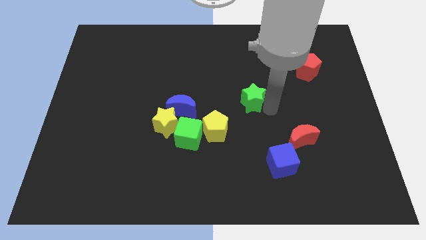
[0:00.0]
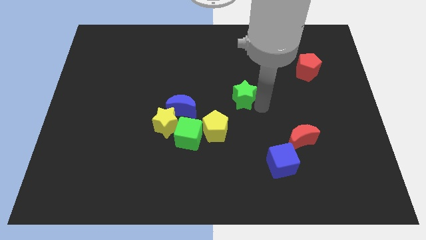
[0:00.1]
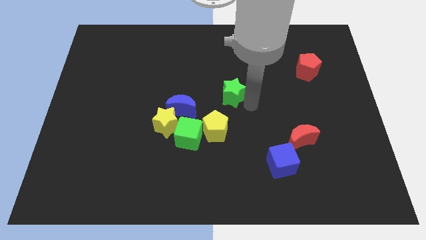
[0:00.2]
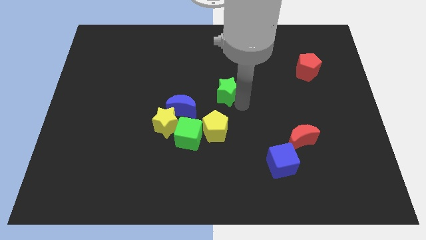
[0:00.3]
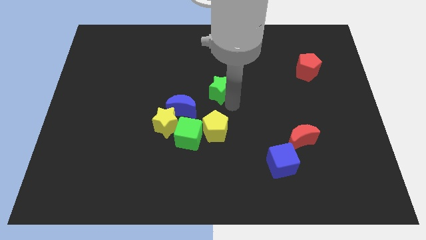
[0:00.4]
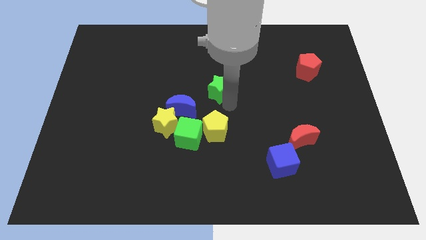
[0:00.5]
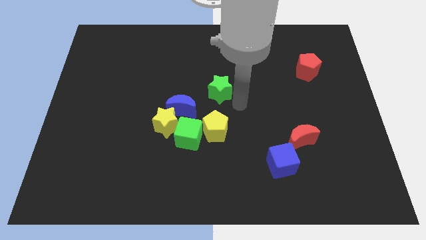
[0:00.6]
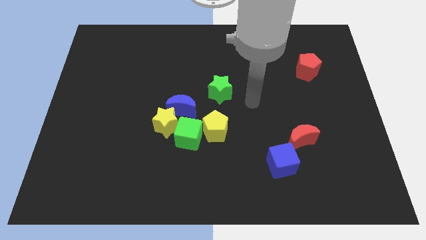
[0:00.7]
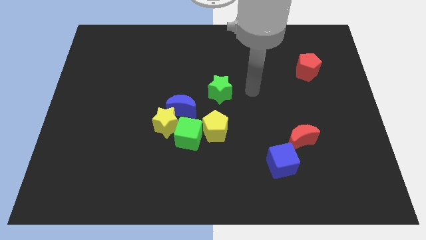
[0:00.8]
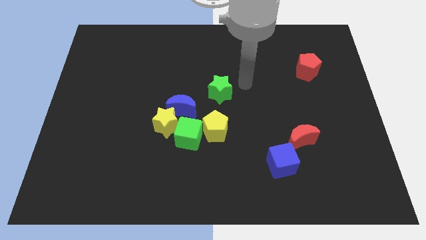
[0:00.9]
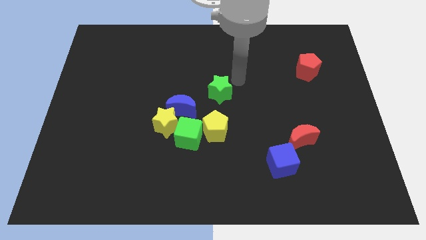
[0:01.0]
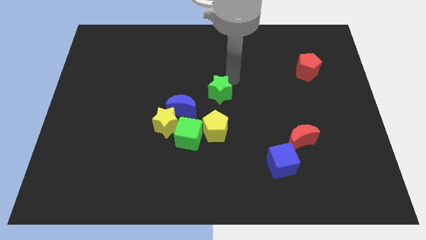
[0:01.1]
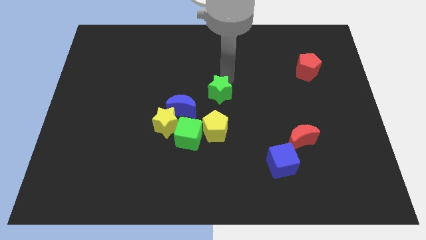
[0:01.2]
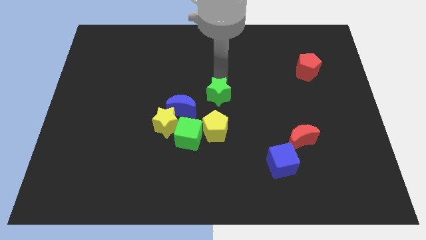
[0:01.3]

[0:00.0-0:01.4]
put the green star vertically above the yellow pentagon

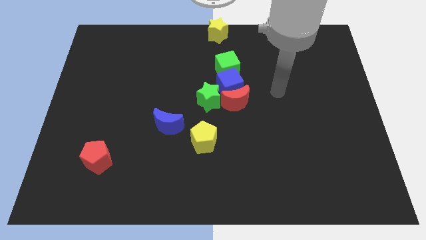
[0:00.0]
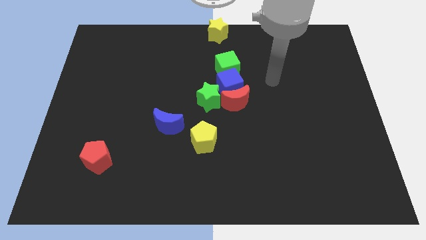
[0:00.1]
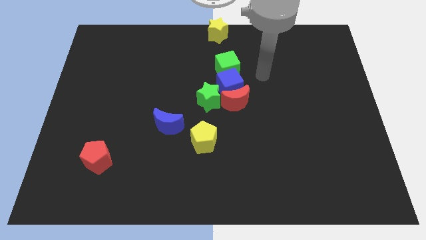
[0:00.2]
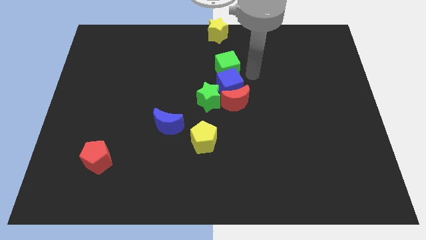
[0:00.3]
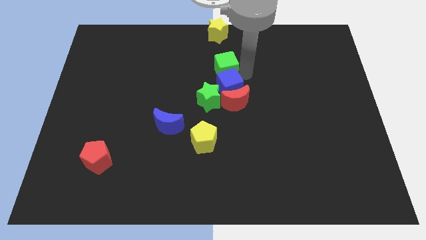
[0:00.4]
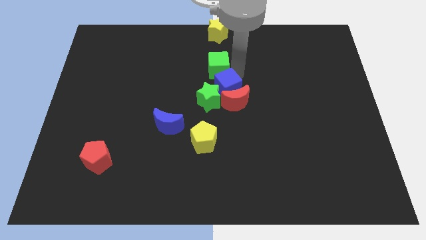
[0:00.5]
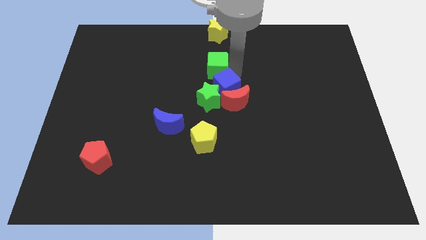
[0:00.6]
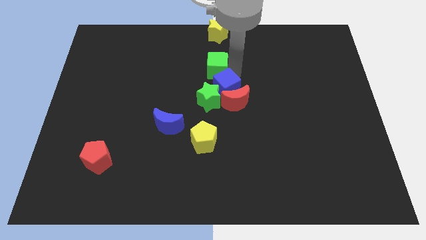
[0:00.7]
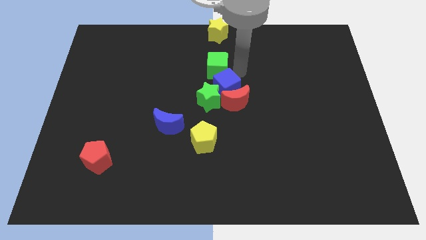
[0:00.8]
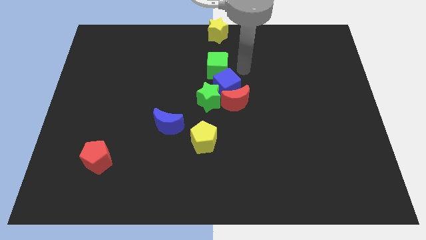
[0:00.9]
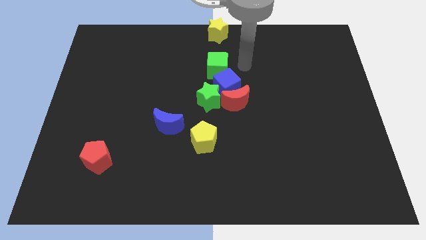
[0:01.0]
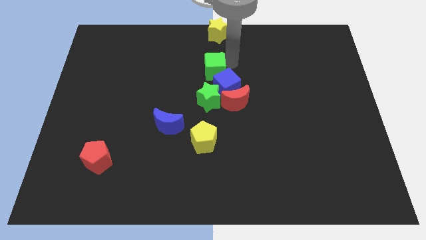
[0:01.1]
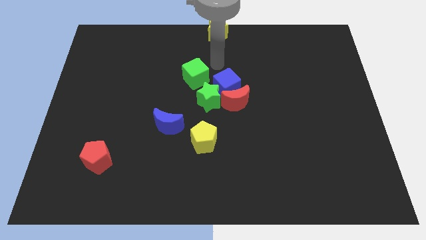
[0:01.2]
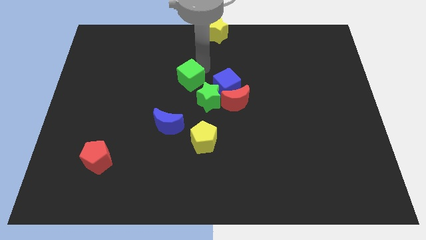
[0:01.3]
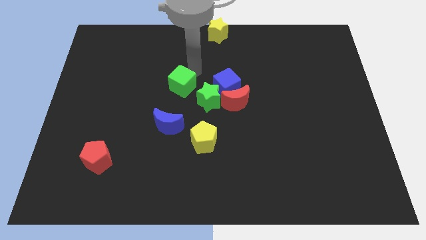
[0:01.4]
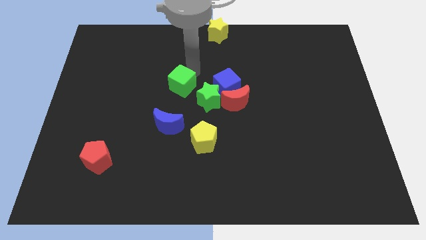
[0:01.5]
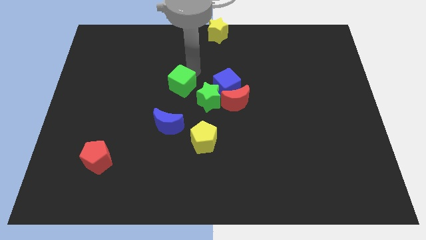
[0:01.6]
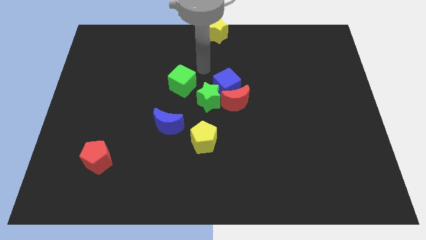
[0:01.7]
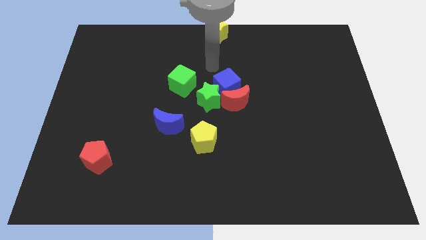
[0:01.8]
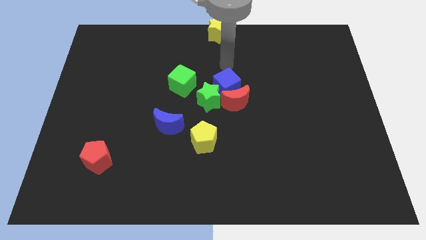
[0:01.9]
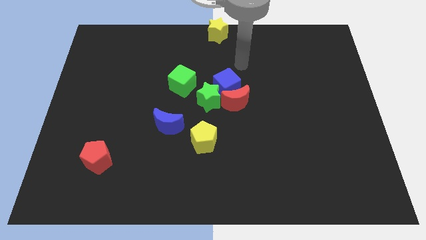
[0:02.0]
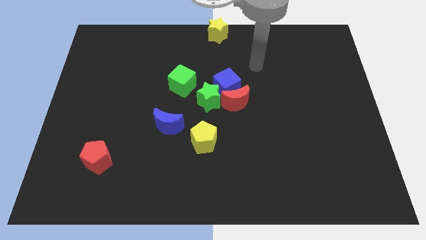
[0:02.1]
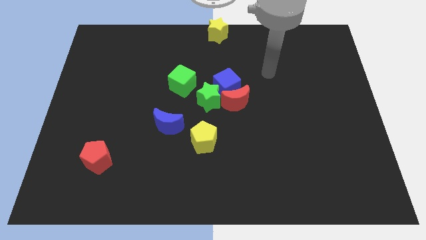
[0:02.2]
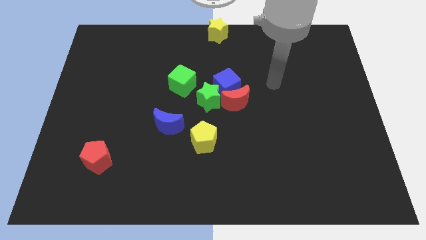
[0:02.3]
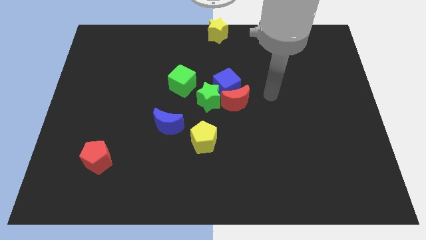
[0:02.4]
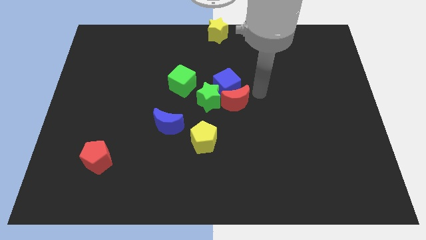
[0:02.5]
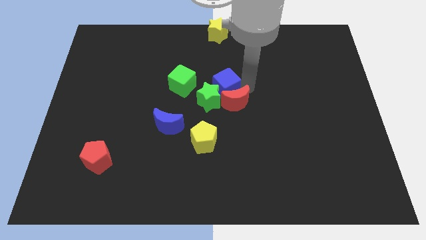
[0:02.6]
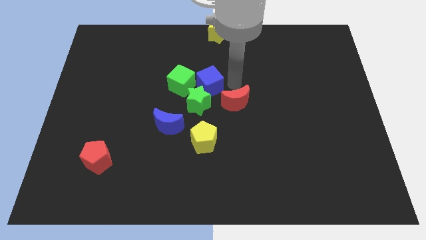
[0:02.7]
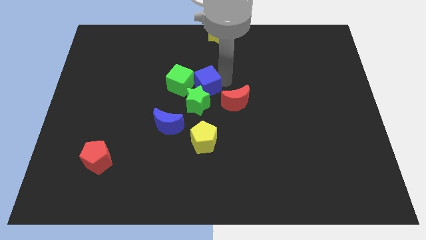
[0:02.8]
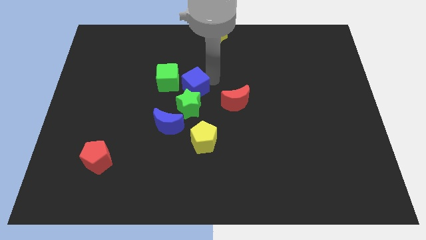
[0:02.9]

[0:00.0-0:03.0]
move the green cube and green star above the blue moon

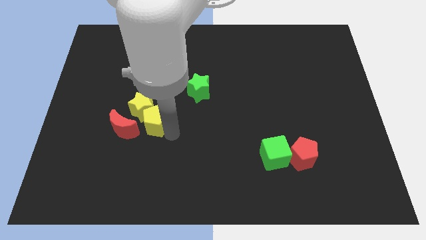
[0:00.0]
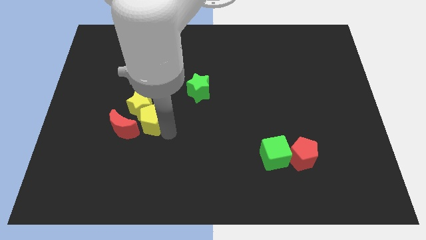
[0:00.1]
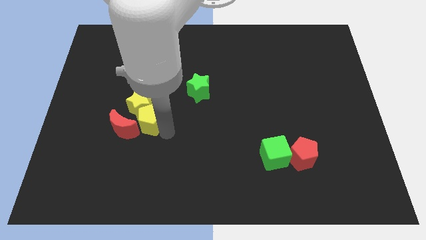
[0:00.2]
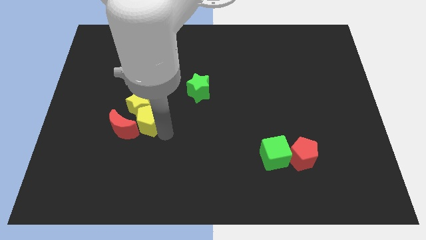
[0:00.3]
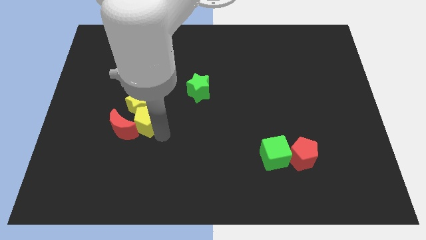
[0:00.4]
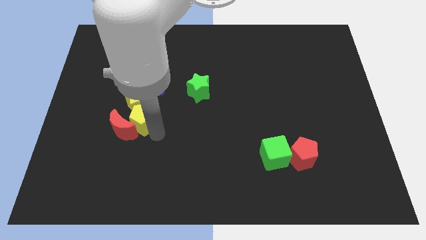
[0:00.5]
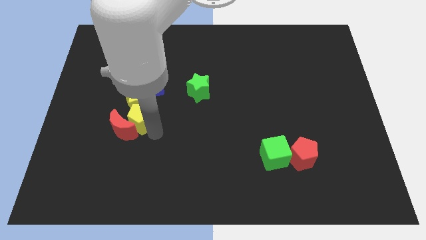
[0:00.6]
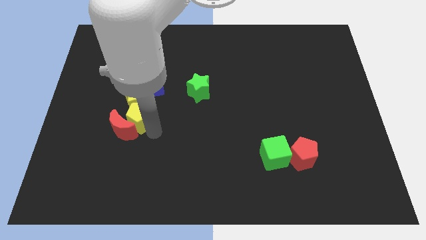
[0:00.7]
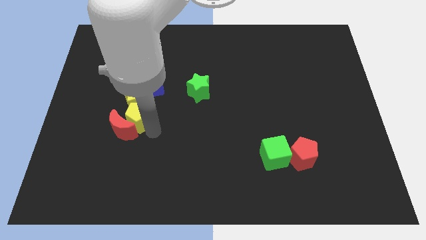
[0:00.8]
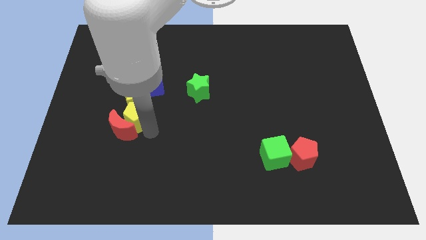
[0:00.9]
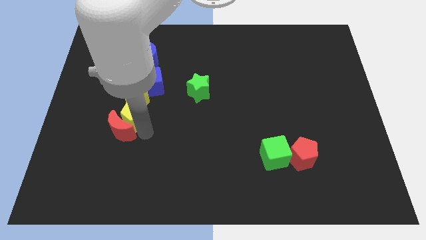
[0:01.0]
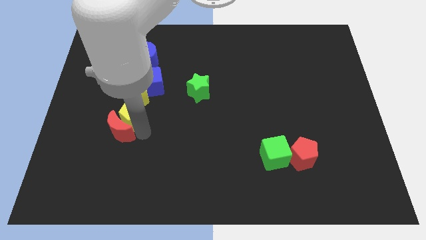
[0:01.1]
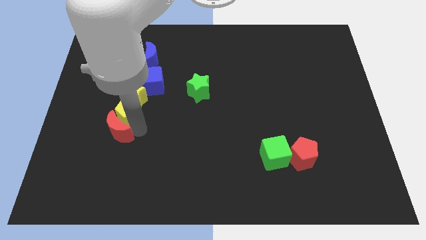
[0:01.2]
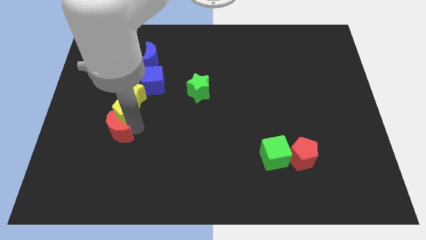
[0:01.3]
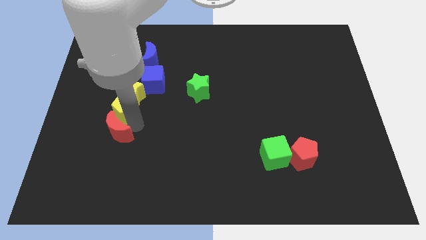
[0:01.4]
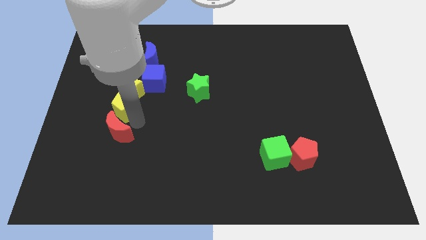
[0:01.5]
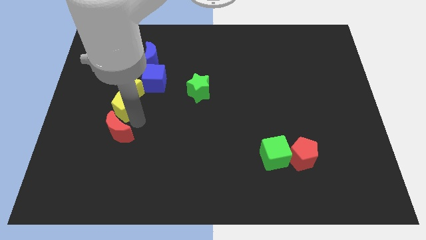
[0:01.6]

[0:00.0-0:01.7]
put both the yellow blocks to the top side of the red moon

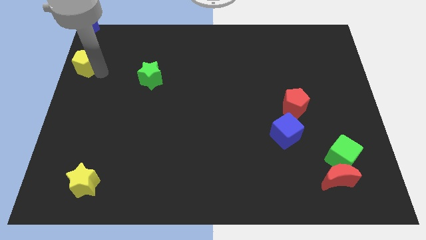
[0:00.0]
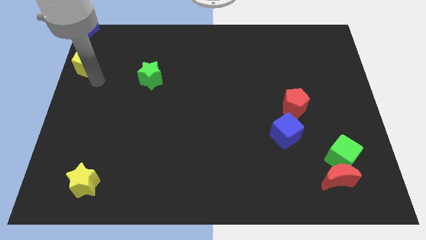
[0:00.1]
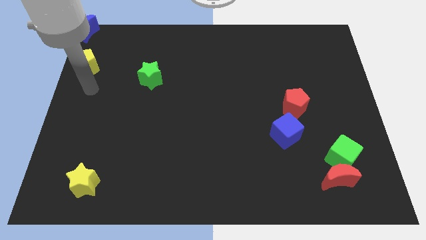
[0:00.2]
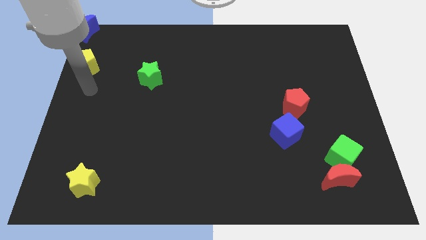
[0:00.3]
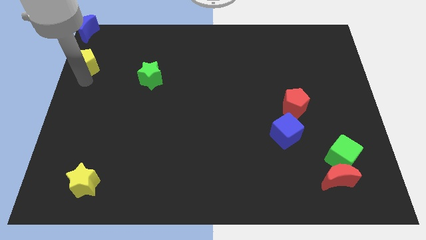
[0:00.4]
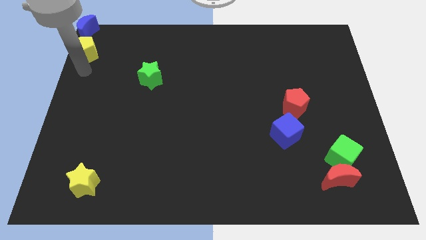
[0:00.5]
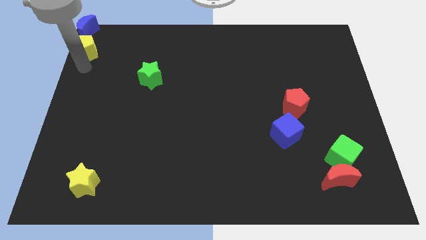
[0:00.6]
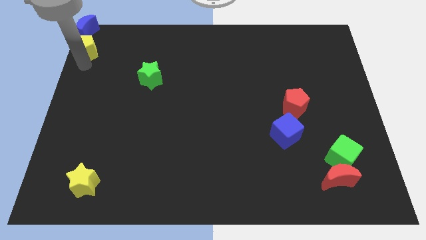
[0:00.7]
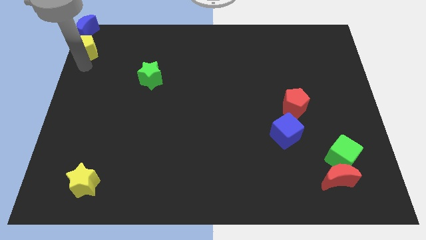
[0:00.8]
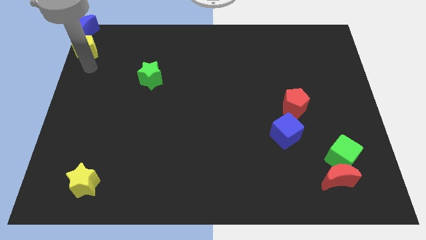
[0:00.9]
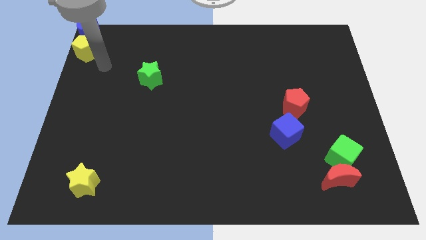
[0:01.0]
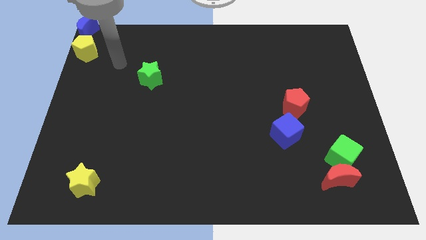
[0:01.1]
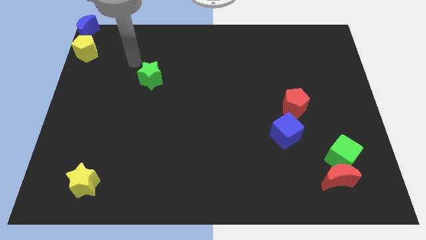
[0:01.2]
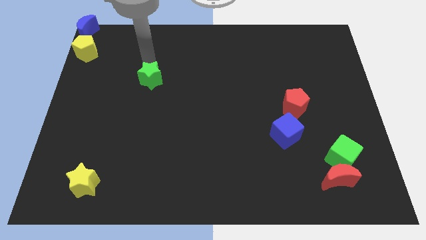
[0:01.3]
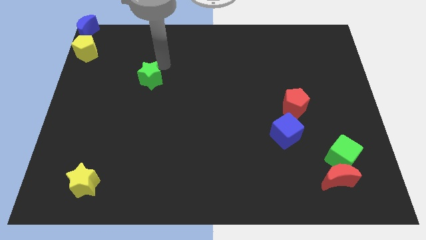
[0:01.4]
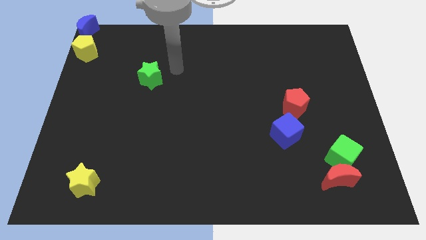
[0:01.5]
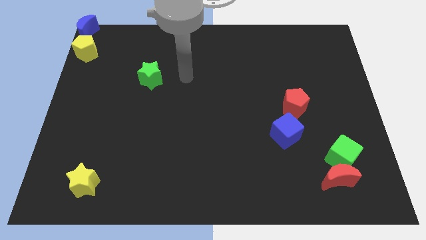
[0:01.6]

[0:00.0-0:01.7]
place the yellow pentagon below the blue crescent

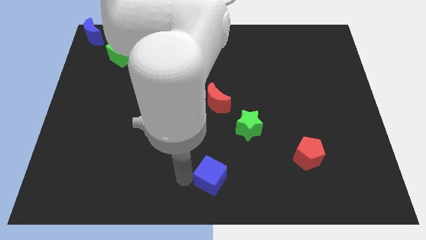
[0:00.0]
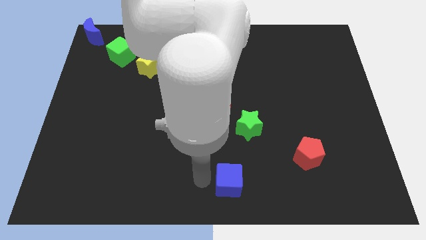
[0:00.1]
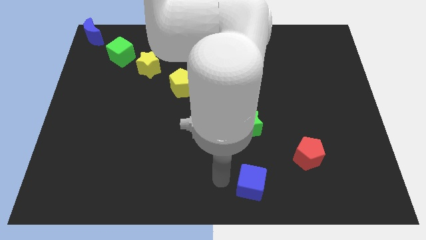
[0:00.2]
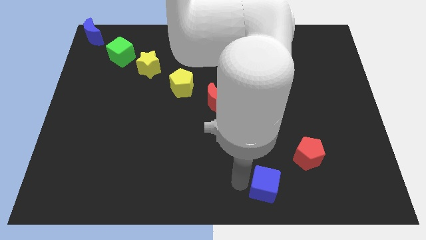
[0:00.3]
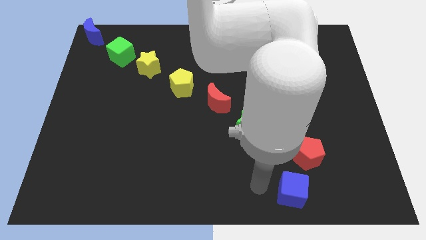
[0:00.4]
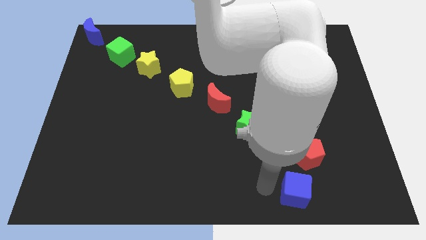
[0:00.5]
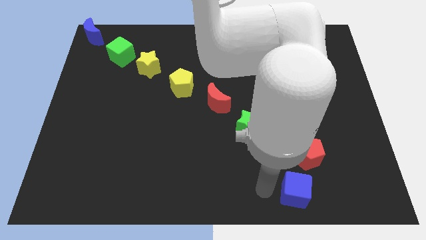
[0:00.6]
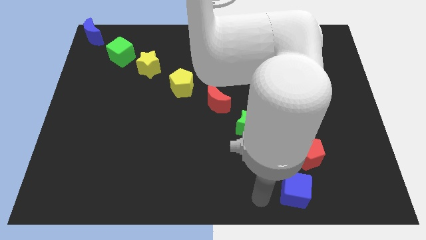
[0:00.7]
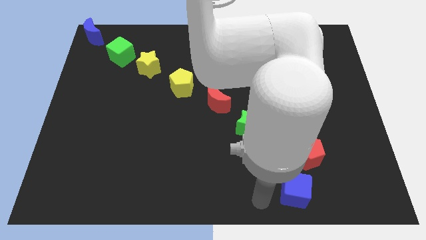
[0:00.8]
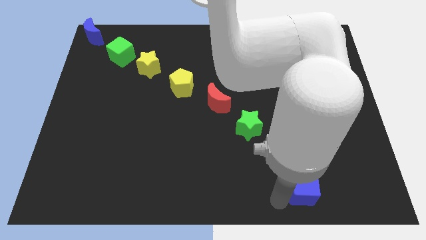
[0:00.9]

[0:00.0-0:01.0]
place the blue cube below the red pentagon

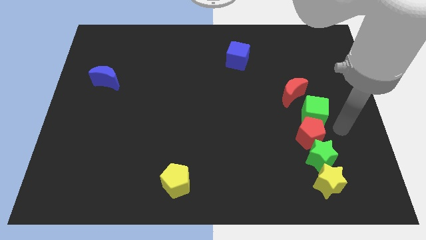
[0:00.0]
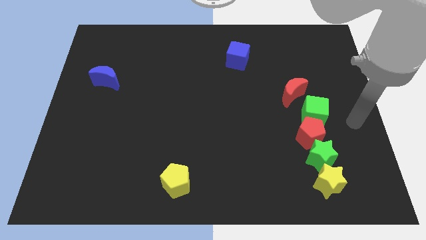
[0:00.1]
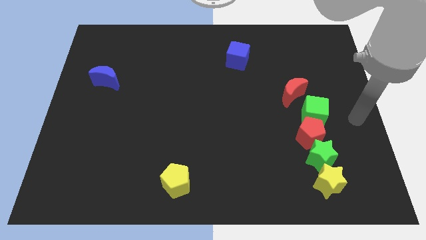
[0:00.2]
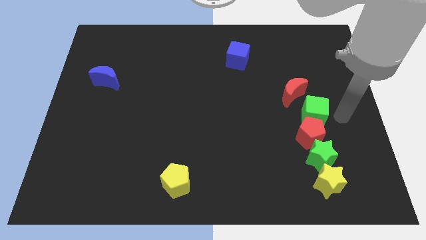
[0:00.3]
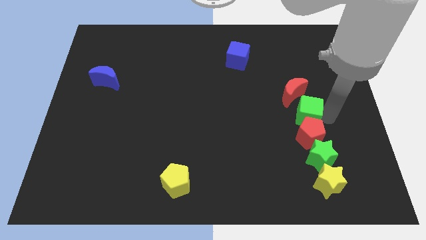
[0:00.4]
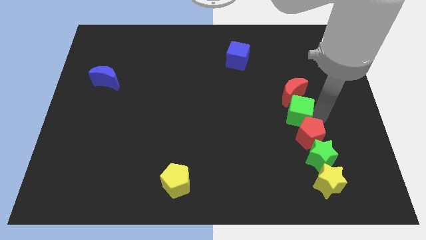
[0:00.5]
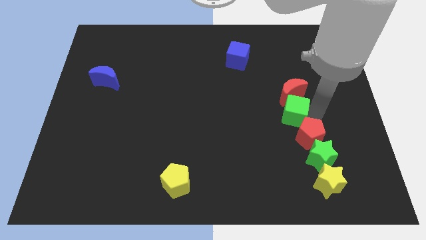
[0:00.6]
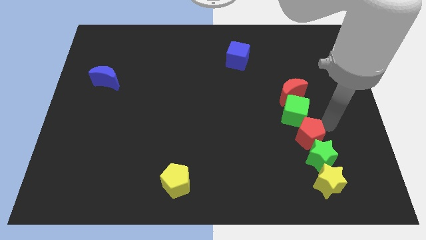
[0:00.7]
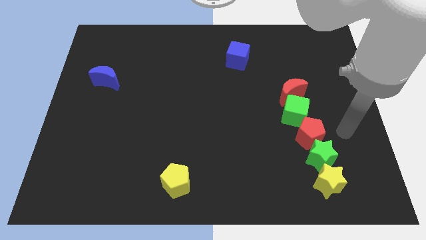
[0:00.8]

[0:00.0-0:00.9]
push green cube between red crescent and red pentagon
